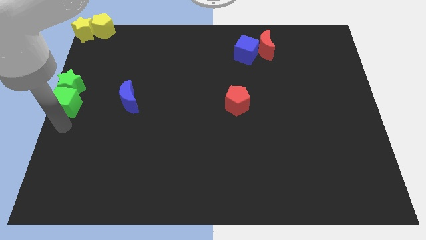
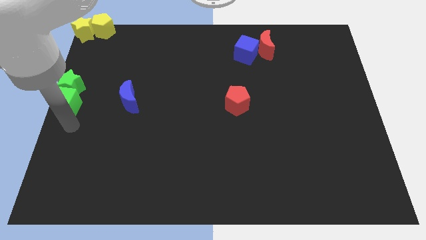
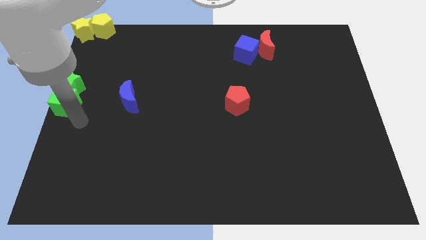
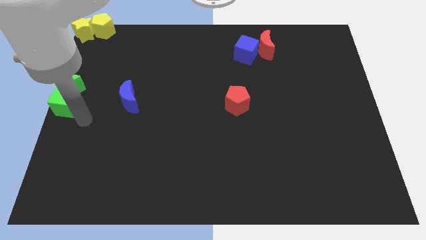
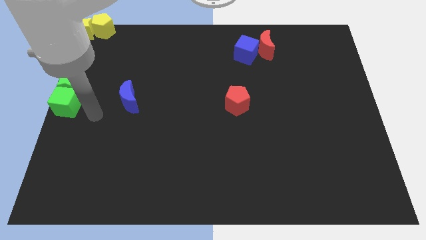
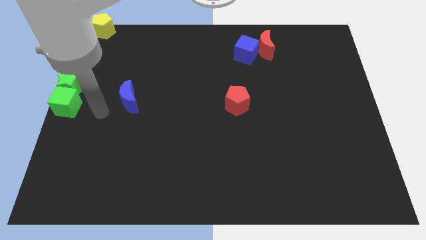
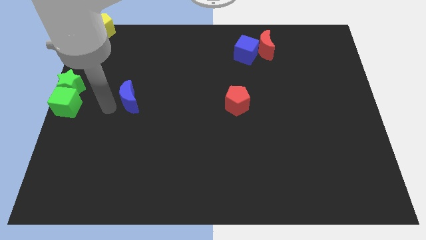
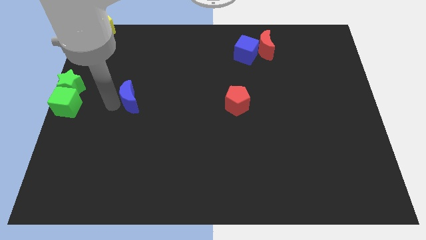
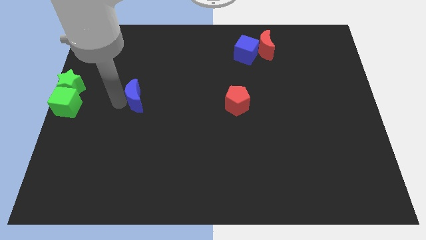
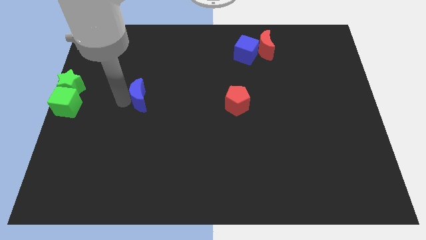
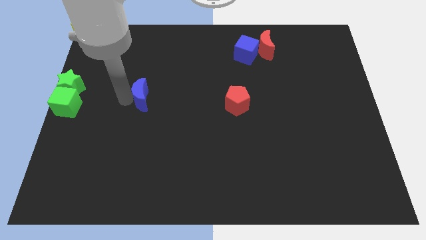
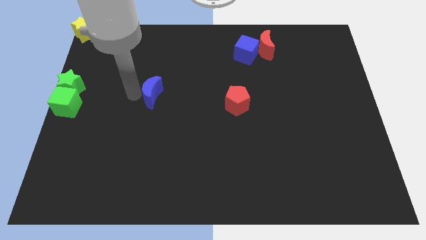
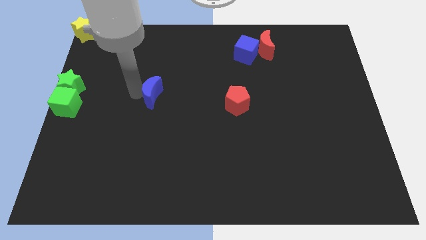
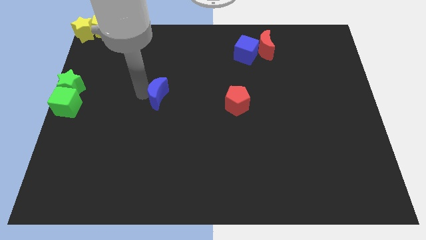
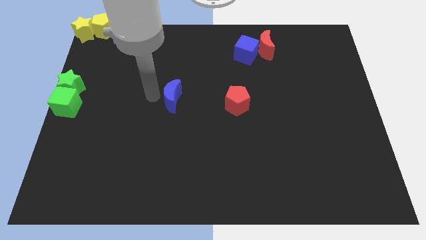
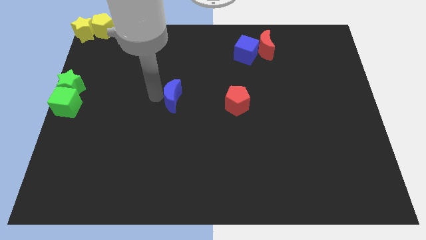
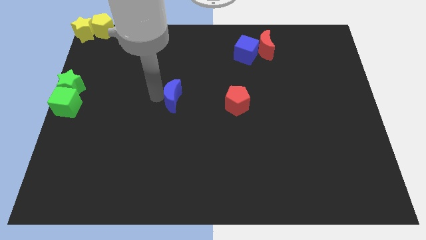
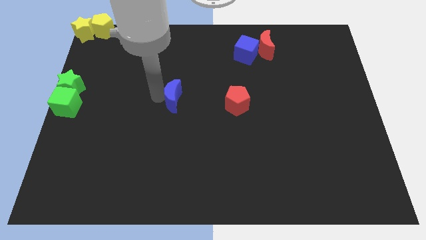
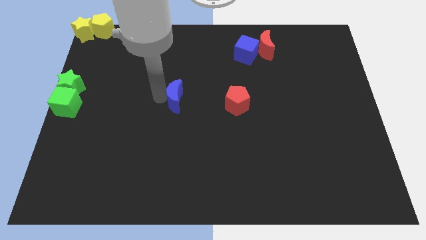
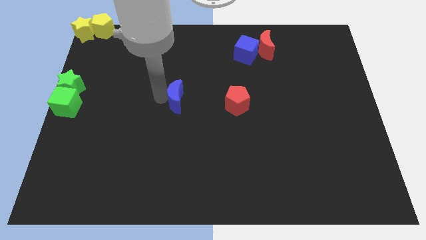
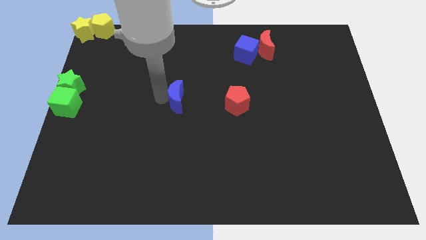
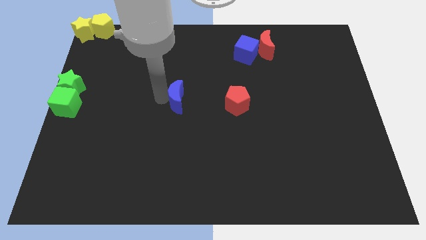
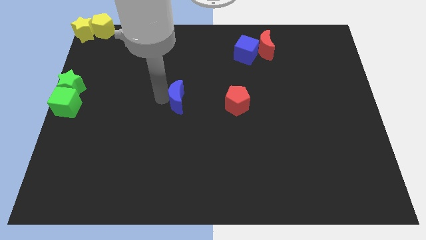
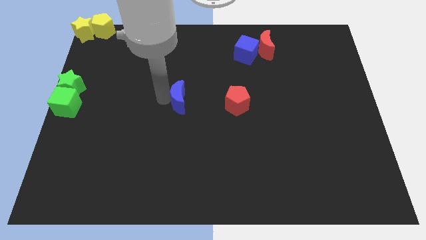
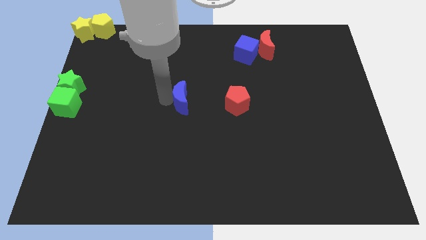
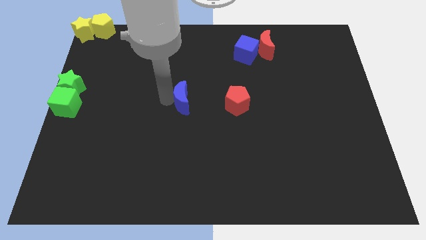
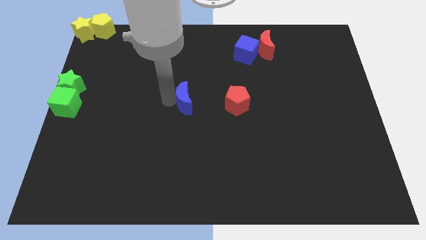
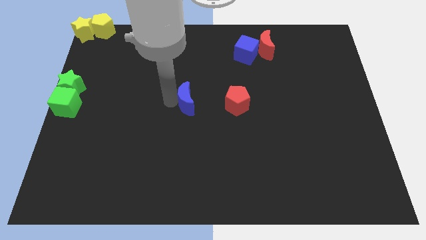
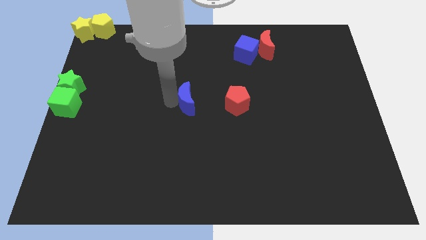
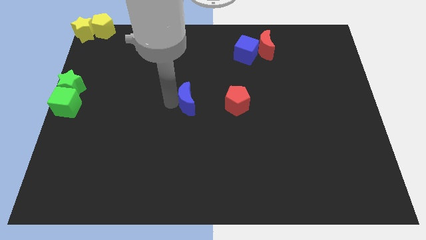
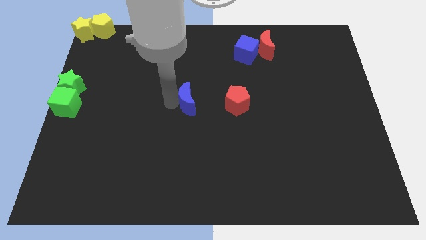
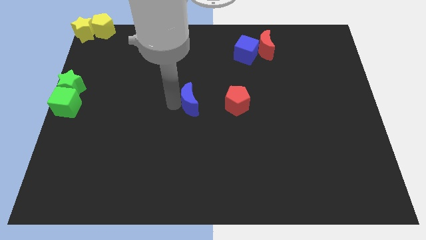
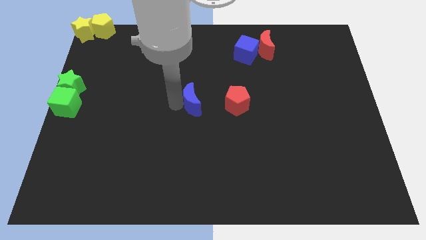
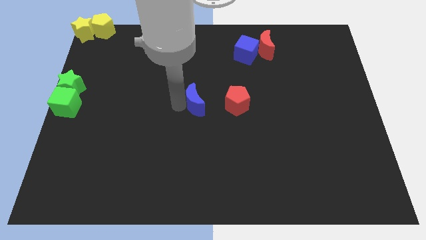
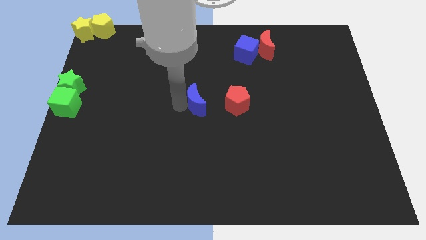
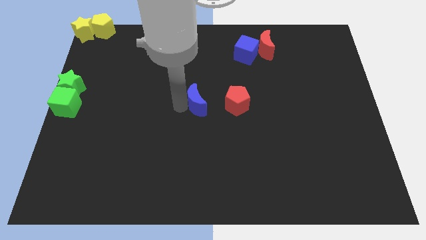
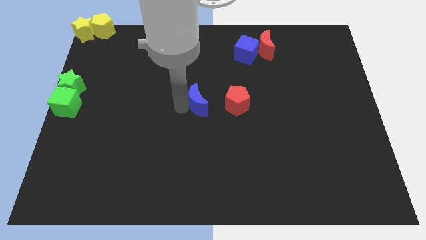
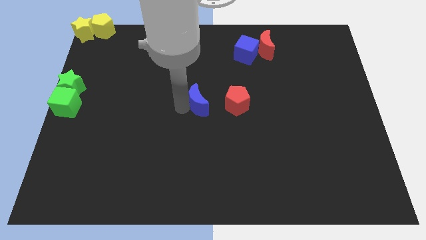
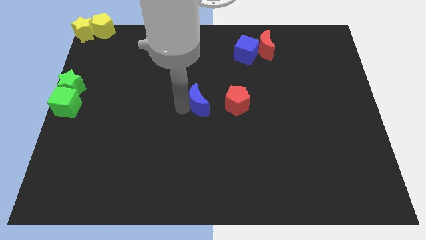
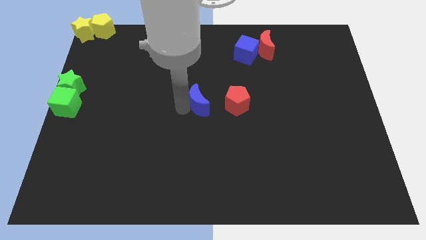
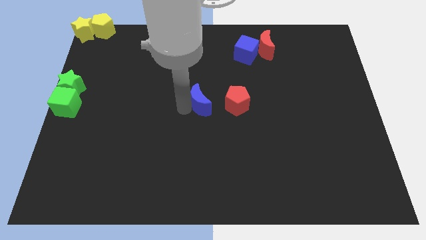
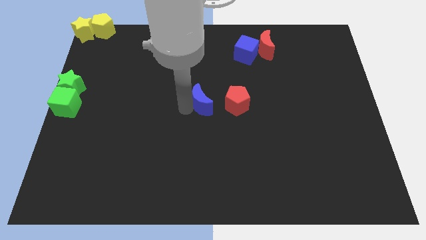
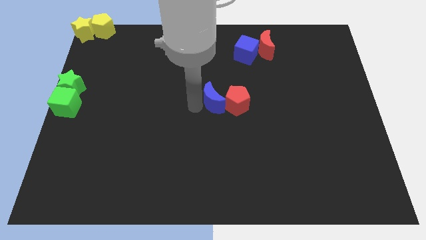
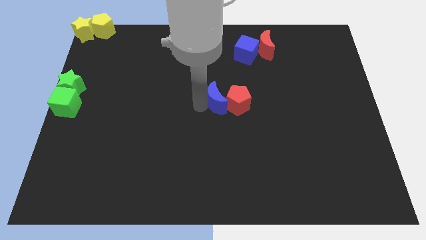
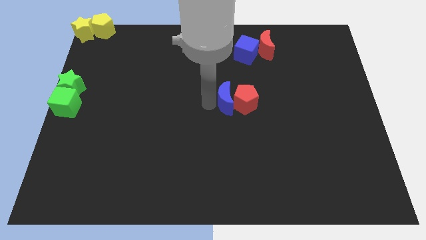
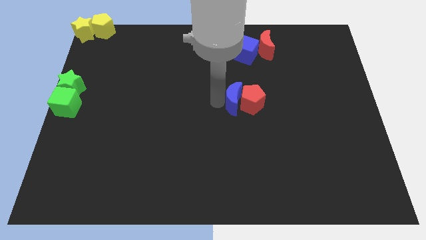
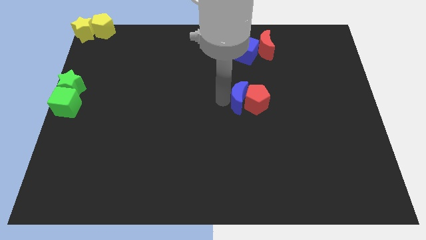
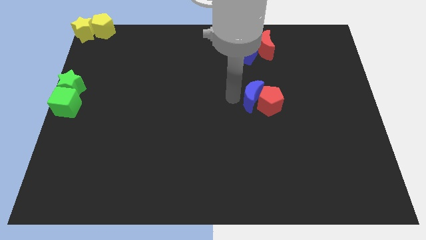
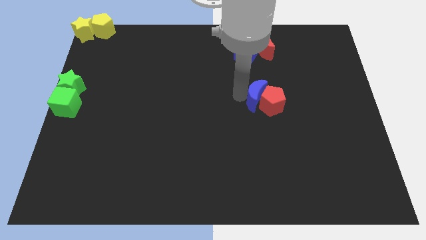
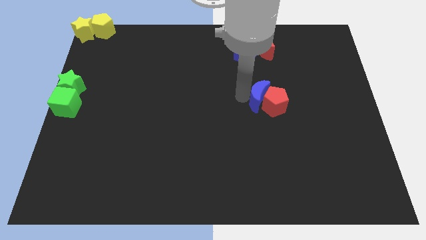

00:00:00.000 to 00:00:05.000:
move the blue moon into the red pentagon

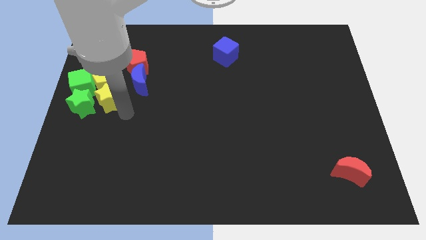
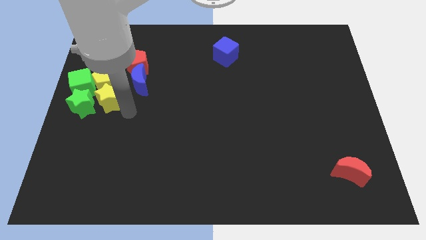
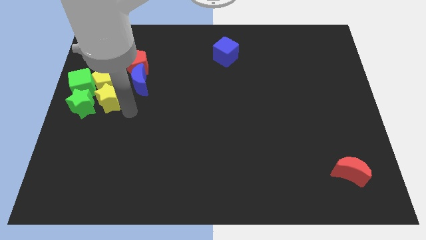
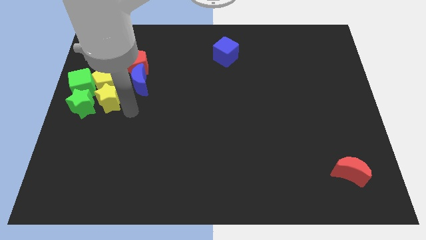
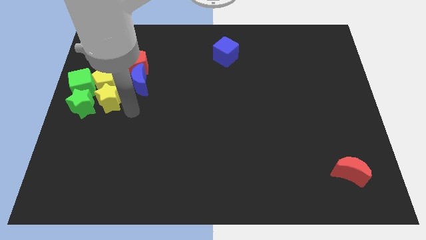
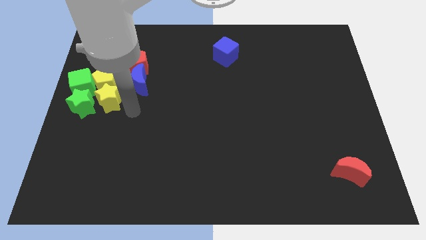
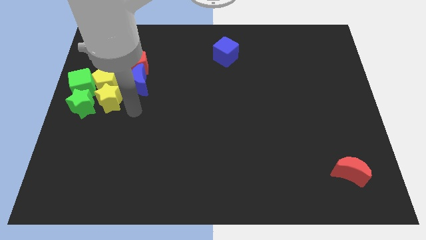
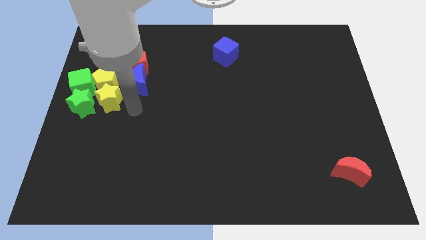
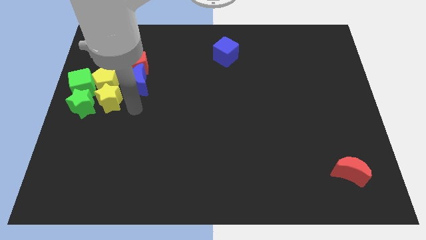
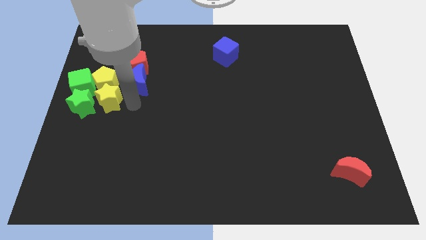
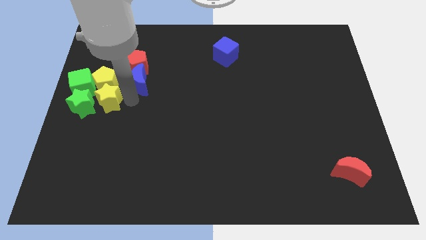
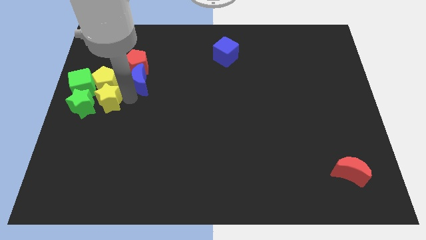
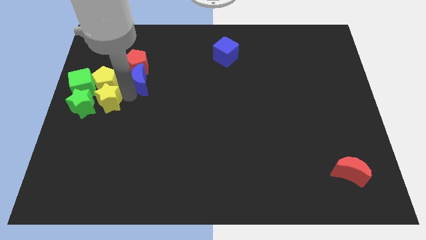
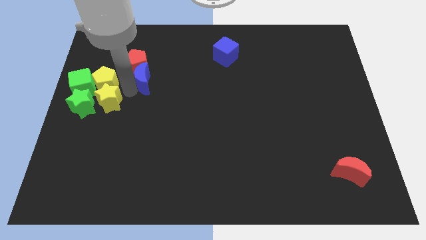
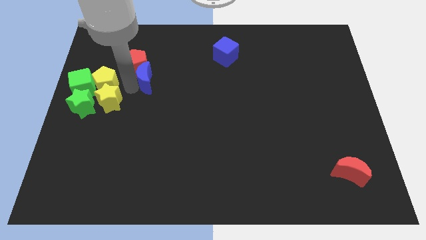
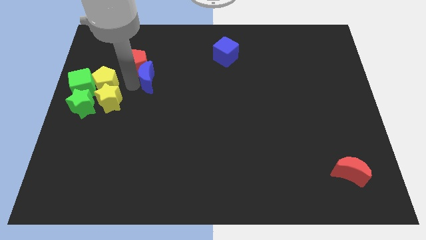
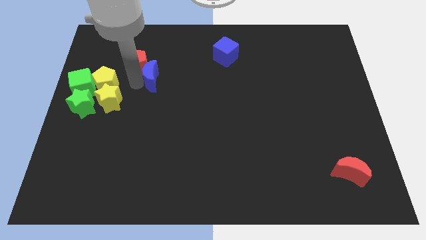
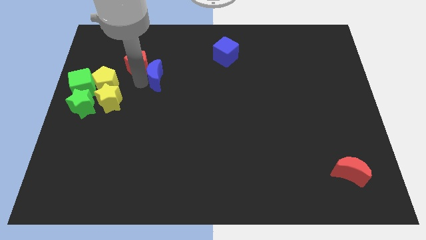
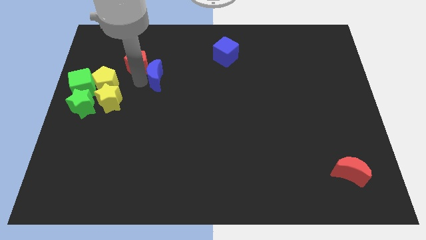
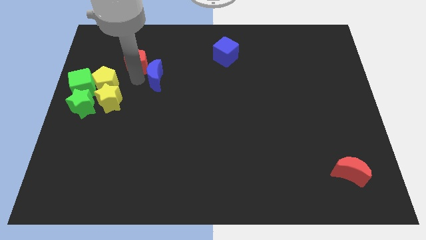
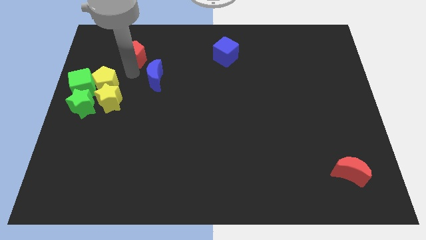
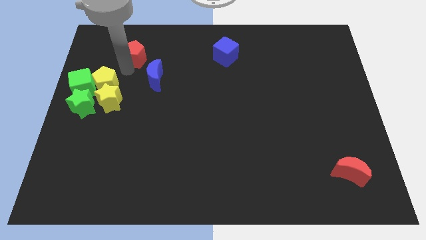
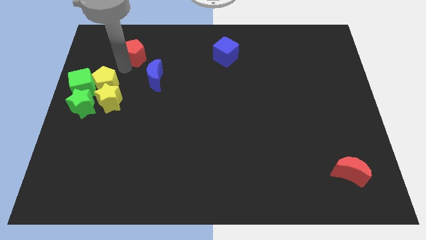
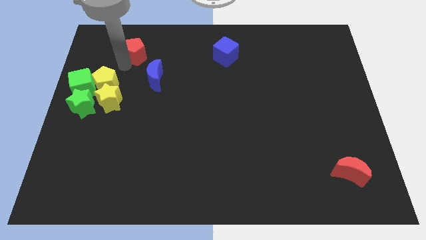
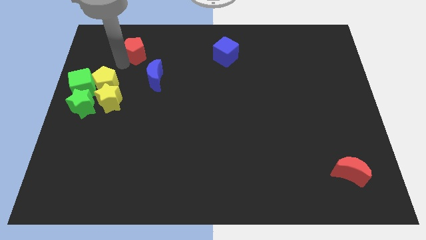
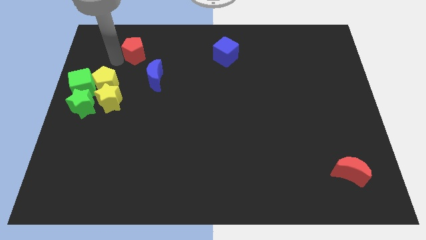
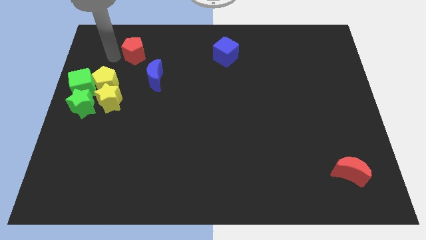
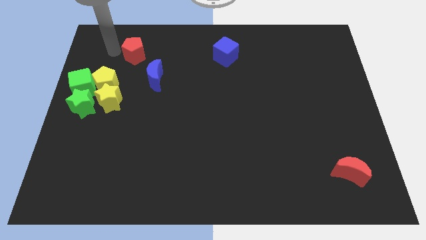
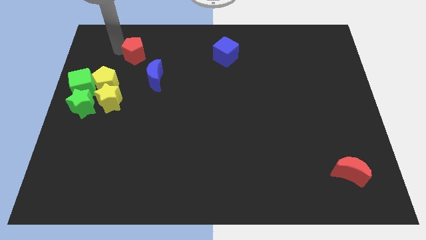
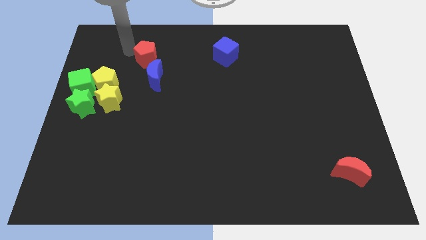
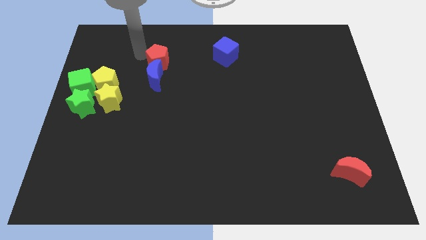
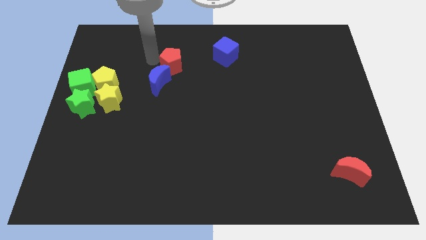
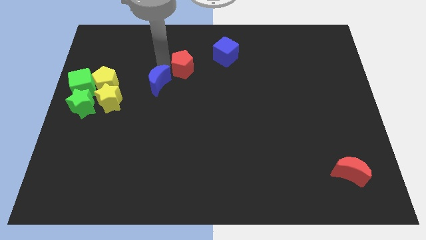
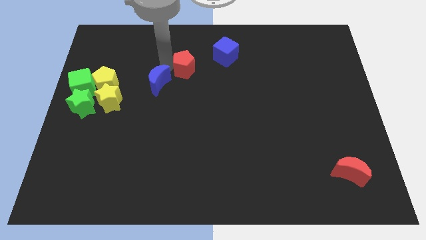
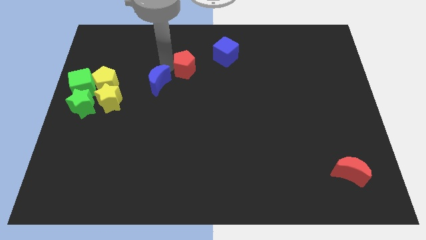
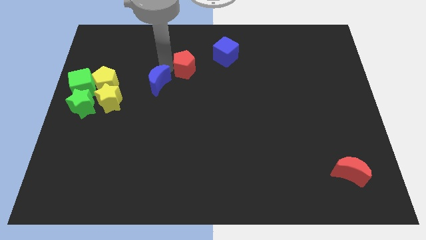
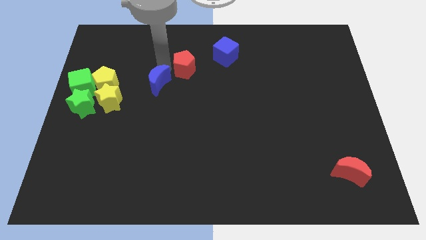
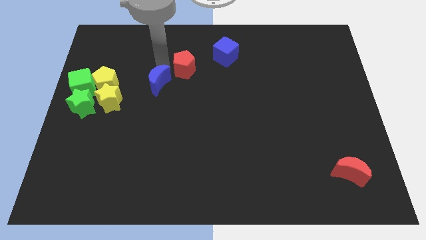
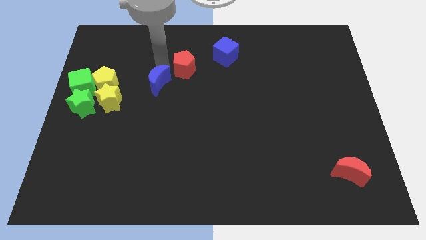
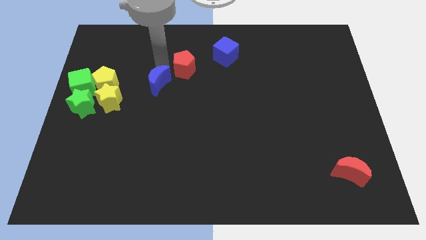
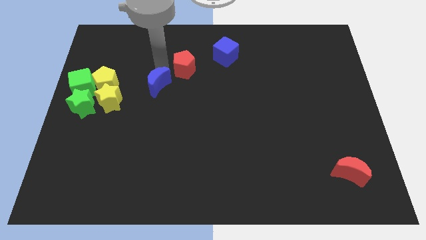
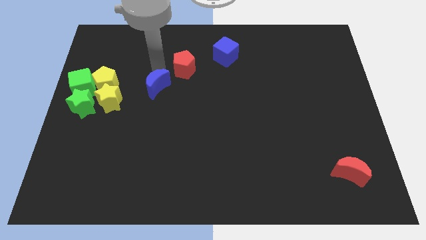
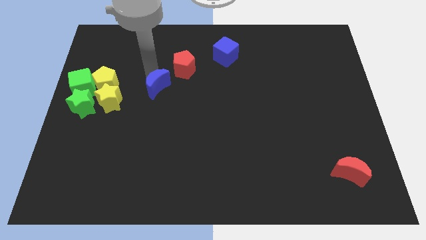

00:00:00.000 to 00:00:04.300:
place the red pentagon in between the blue cube and blue crescent
